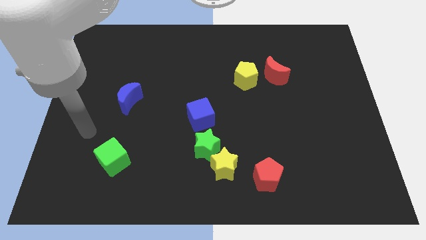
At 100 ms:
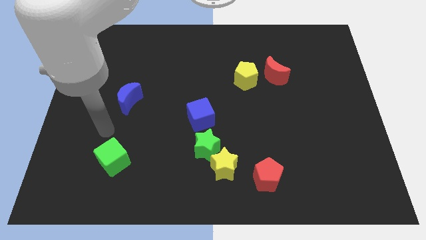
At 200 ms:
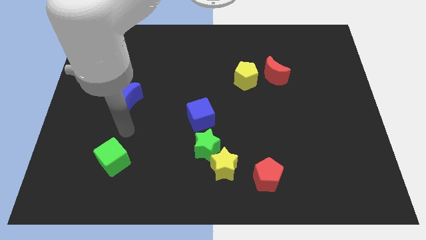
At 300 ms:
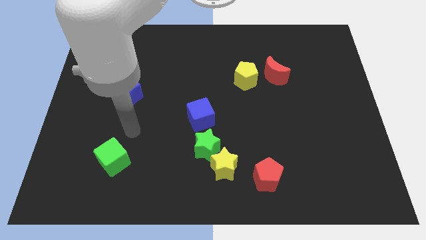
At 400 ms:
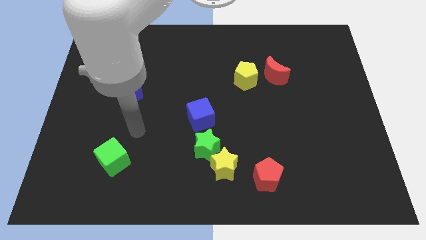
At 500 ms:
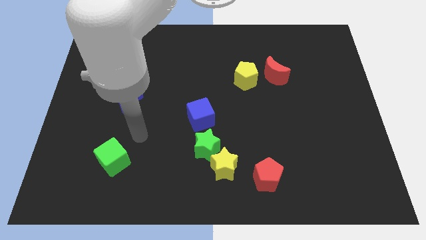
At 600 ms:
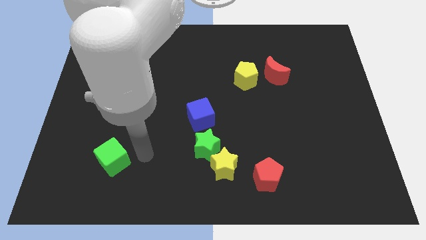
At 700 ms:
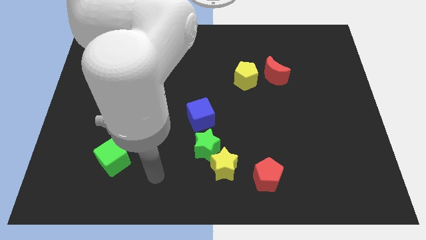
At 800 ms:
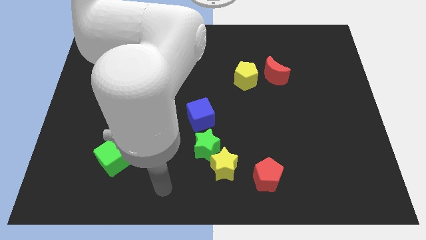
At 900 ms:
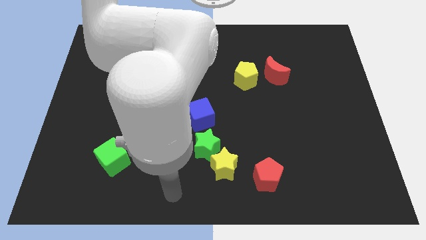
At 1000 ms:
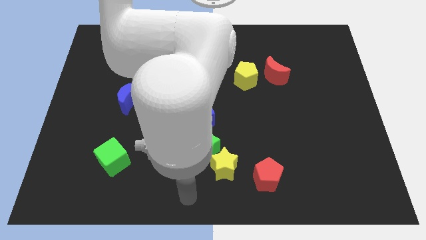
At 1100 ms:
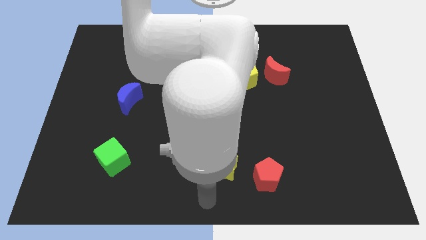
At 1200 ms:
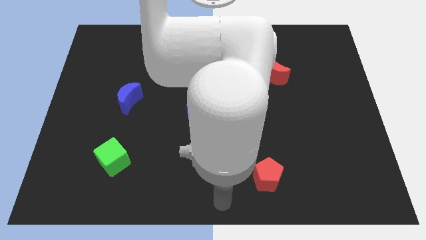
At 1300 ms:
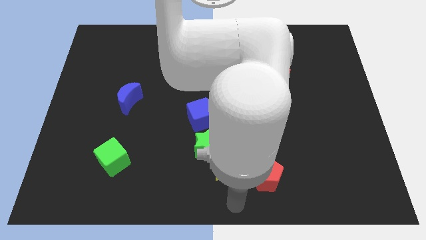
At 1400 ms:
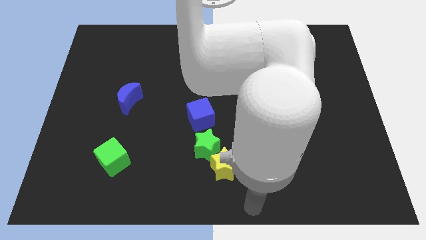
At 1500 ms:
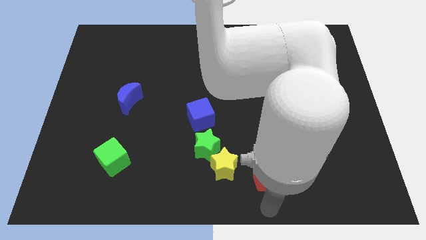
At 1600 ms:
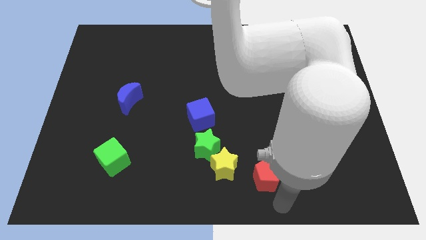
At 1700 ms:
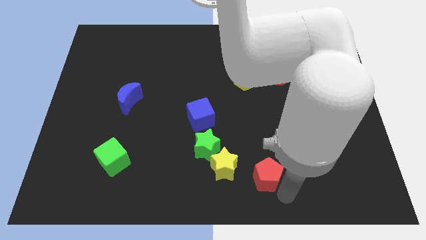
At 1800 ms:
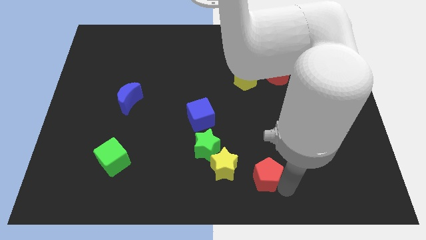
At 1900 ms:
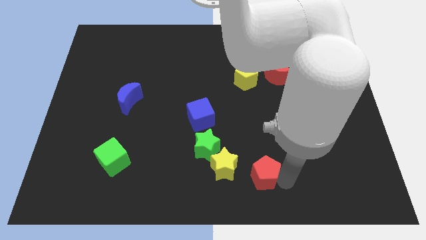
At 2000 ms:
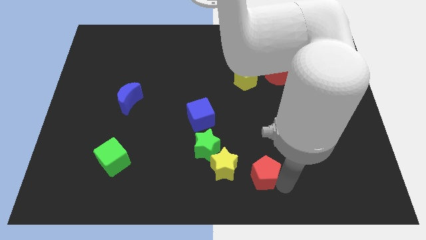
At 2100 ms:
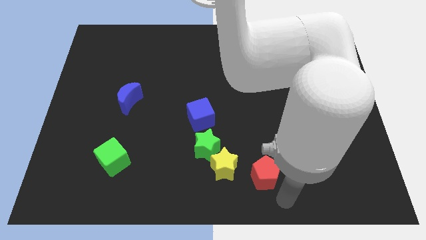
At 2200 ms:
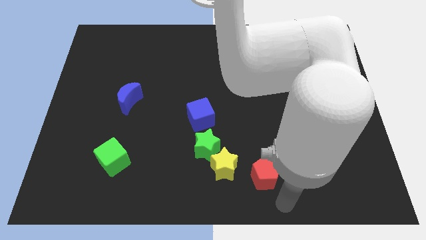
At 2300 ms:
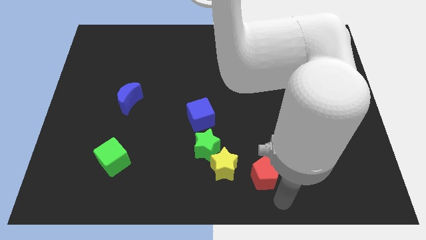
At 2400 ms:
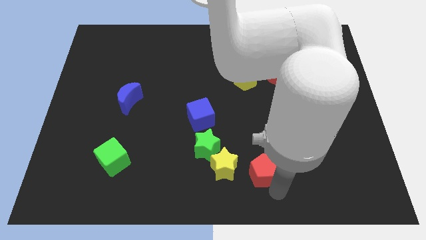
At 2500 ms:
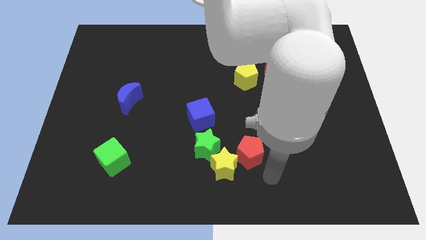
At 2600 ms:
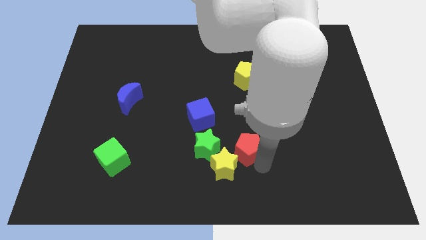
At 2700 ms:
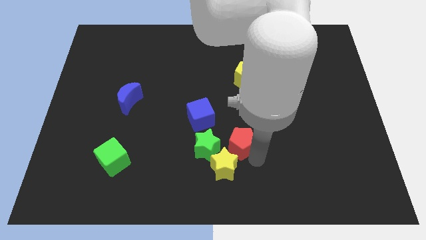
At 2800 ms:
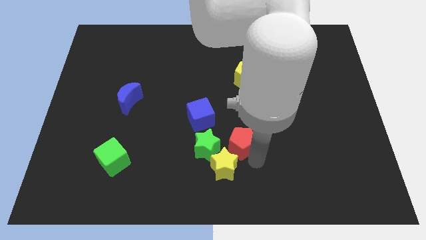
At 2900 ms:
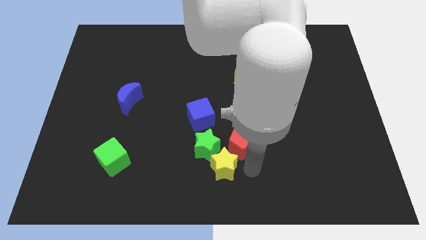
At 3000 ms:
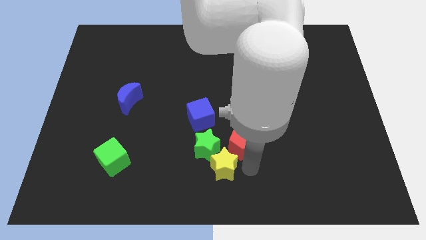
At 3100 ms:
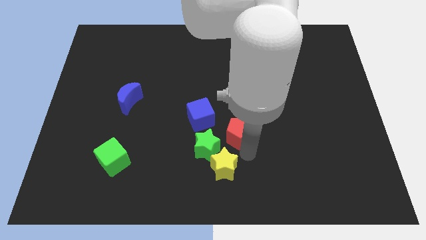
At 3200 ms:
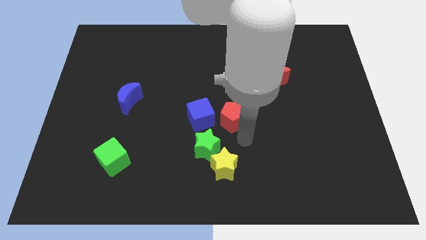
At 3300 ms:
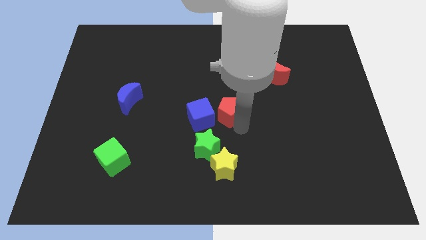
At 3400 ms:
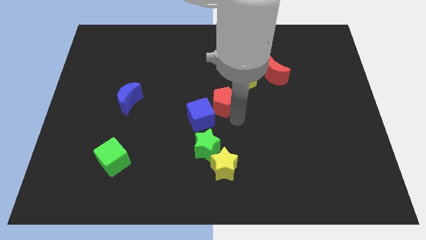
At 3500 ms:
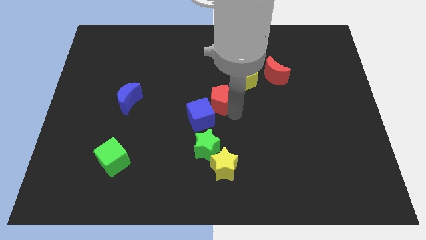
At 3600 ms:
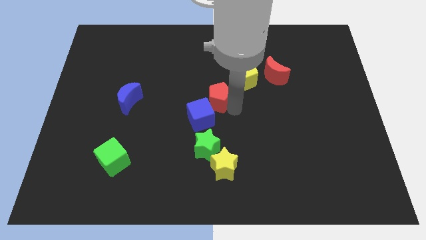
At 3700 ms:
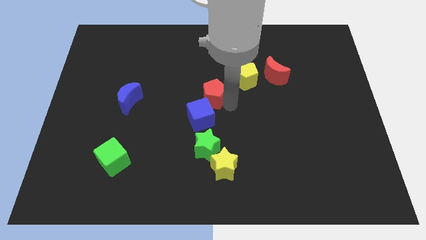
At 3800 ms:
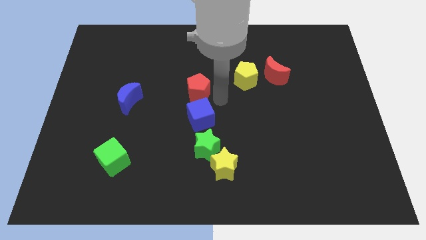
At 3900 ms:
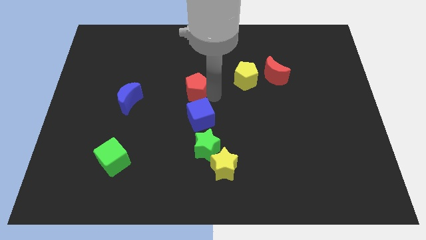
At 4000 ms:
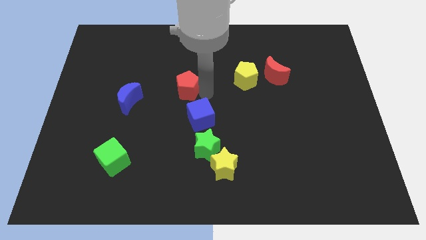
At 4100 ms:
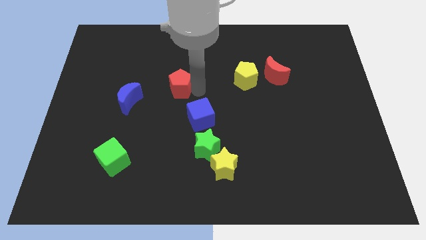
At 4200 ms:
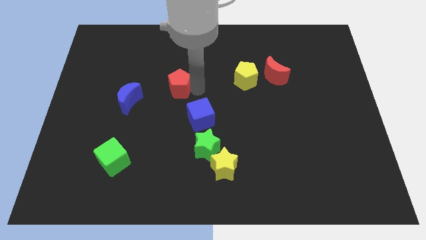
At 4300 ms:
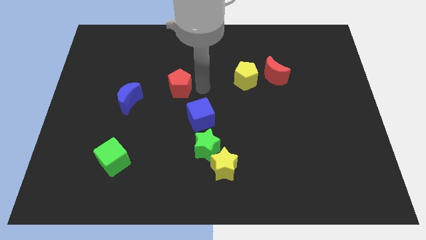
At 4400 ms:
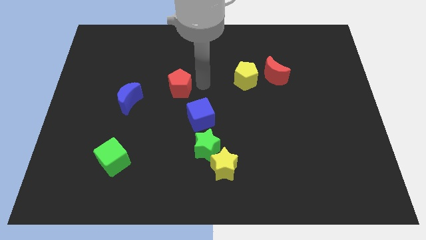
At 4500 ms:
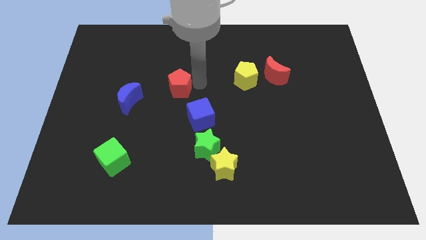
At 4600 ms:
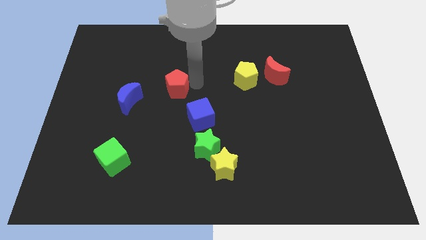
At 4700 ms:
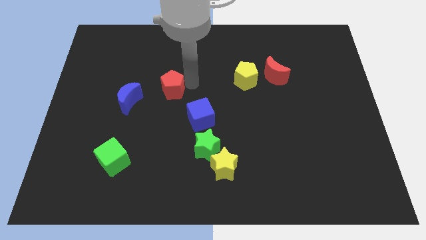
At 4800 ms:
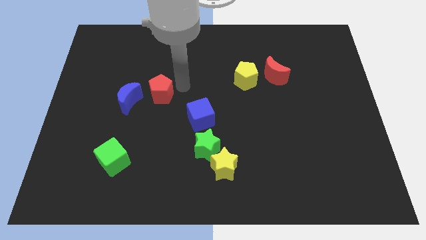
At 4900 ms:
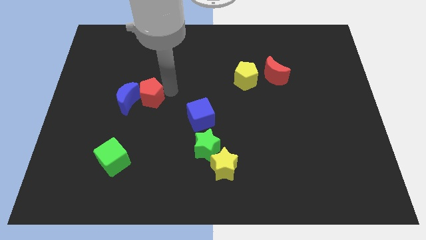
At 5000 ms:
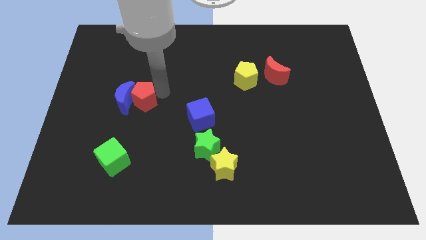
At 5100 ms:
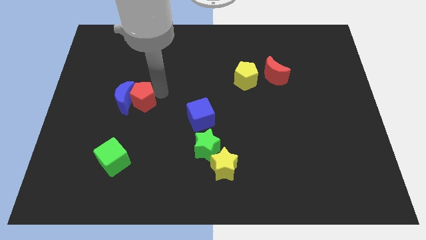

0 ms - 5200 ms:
move the red pentagon towards the blue moon

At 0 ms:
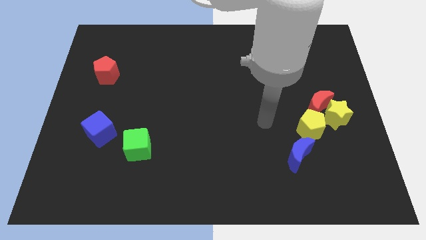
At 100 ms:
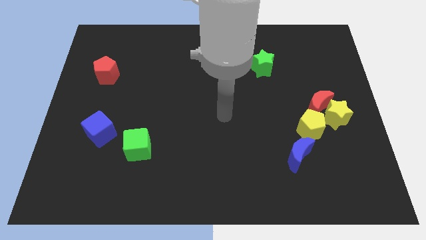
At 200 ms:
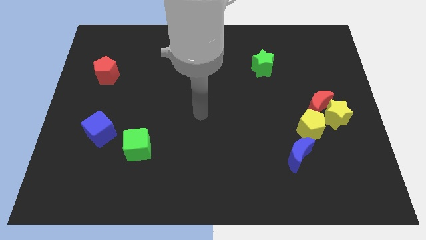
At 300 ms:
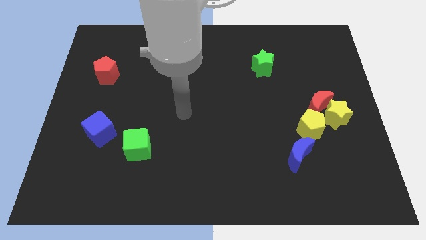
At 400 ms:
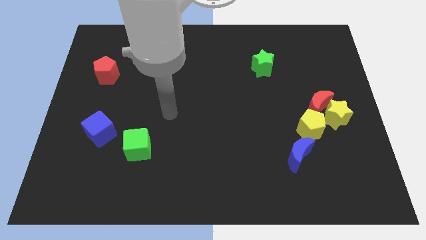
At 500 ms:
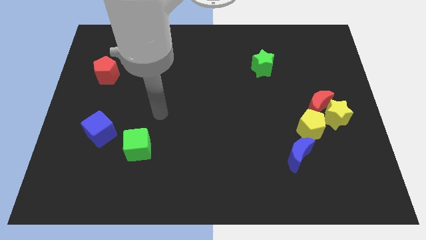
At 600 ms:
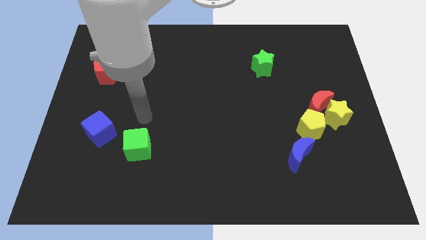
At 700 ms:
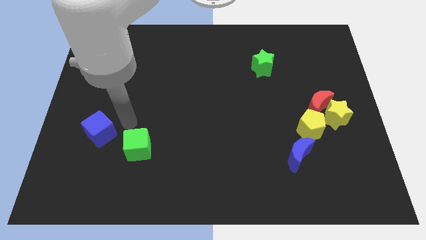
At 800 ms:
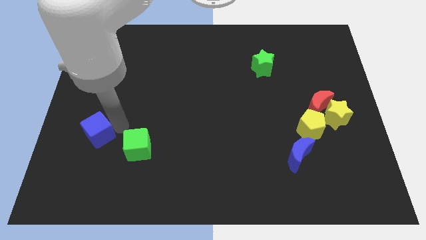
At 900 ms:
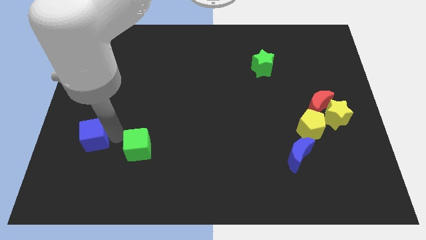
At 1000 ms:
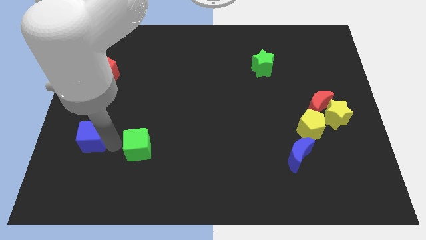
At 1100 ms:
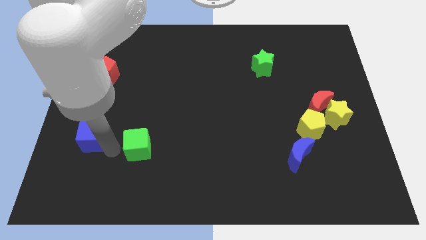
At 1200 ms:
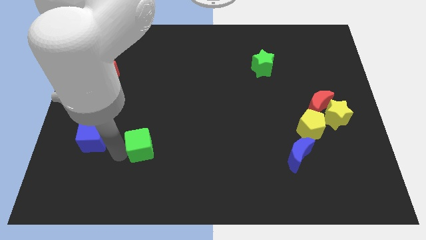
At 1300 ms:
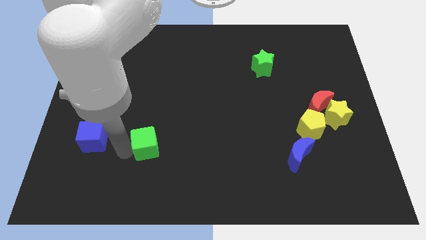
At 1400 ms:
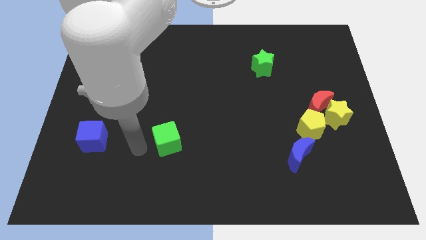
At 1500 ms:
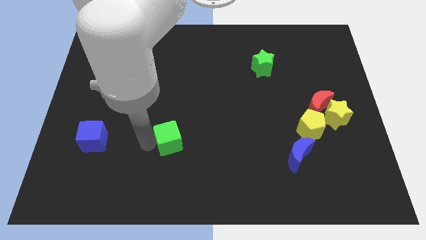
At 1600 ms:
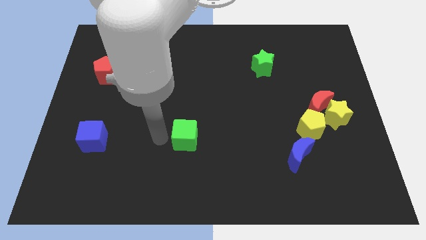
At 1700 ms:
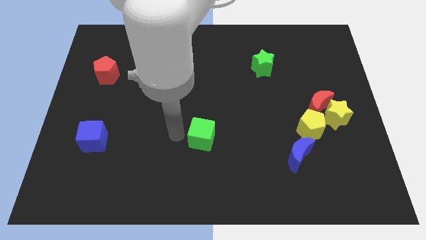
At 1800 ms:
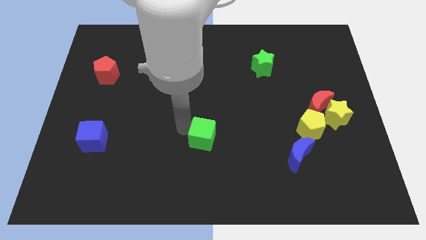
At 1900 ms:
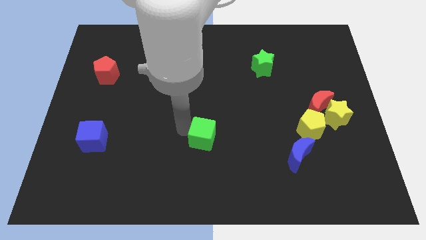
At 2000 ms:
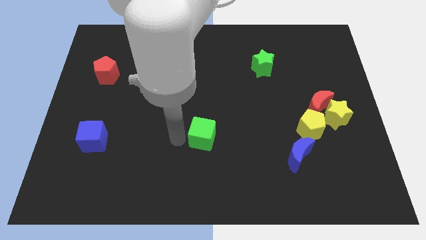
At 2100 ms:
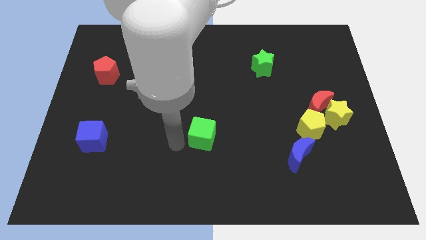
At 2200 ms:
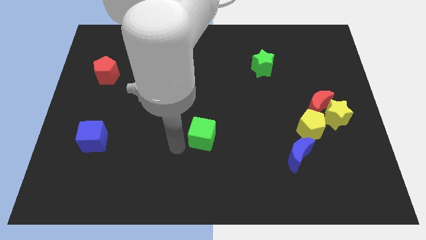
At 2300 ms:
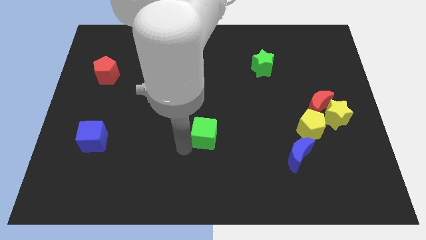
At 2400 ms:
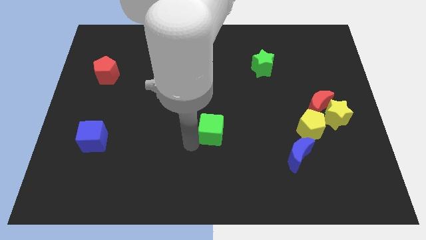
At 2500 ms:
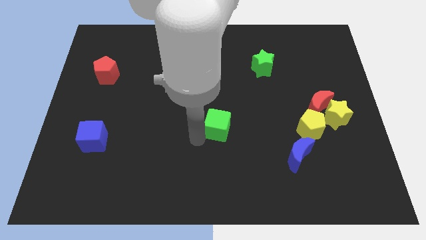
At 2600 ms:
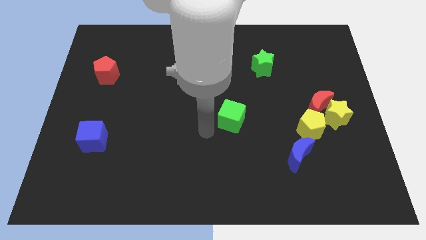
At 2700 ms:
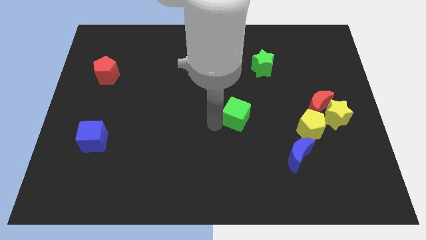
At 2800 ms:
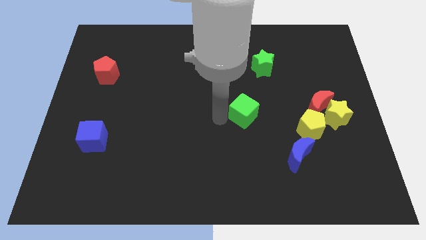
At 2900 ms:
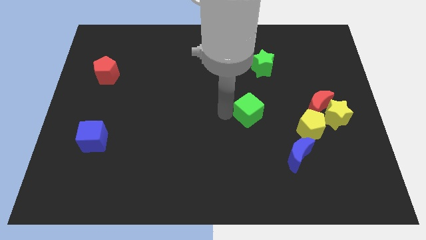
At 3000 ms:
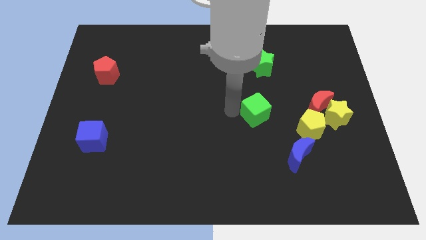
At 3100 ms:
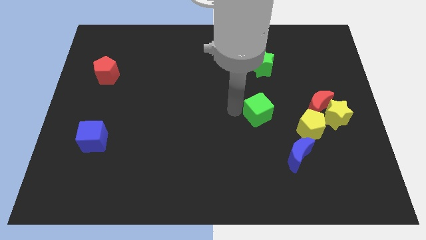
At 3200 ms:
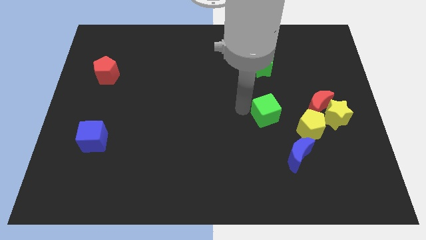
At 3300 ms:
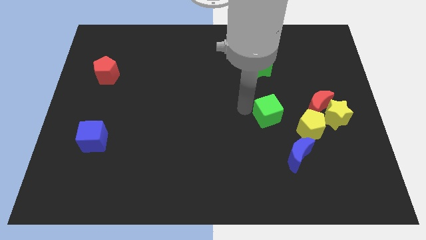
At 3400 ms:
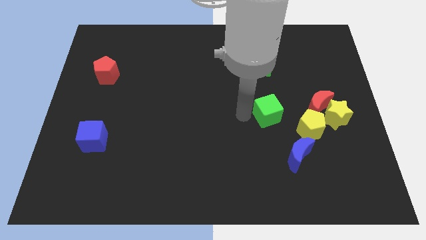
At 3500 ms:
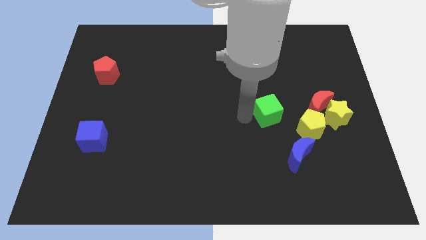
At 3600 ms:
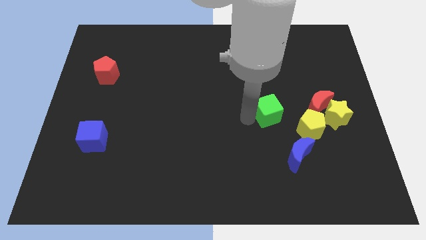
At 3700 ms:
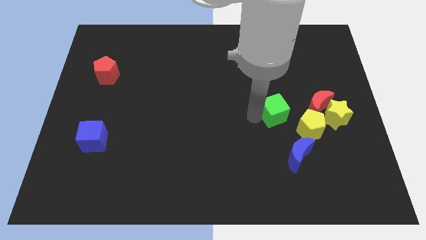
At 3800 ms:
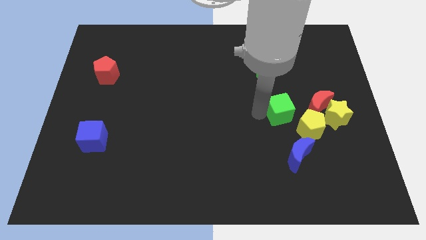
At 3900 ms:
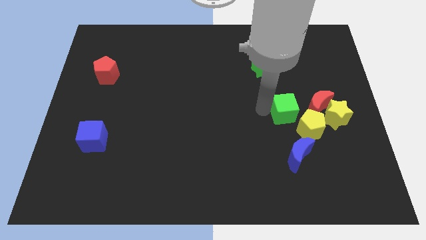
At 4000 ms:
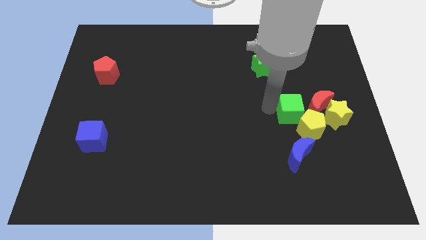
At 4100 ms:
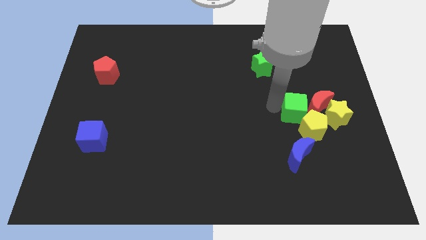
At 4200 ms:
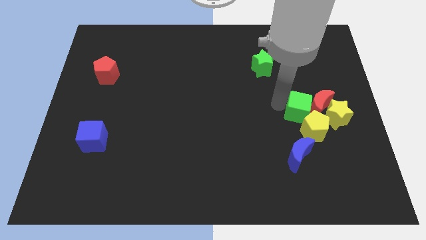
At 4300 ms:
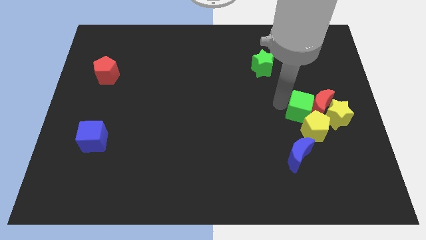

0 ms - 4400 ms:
put the green cube next to the red moon
